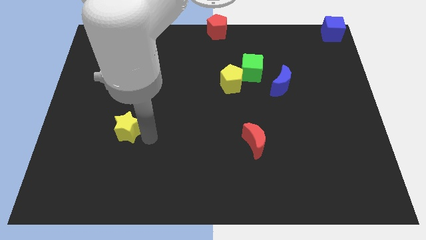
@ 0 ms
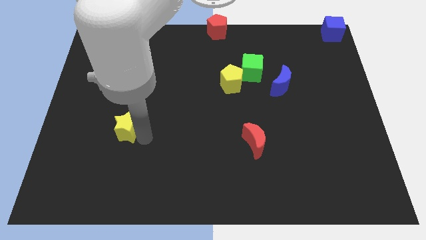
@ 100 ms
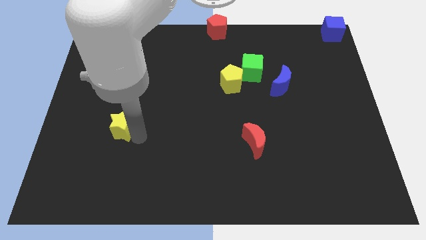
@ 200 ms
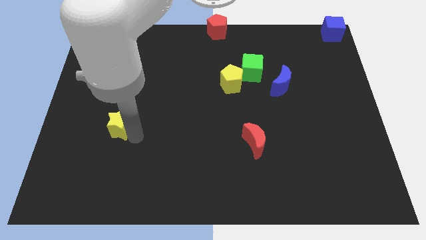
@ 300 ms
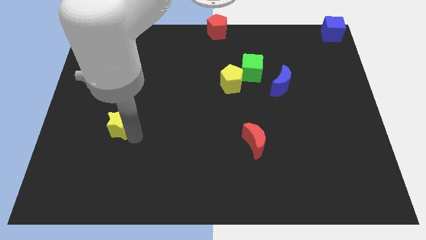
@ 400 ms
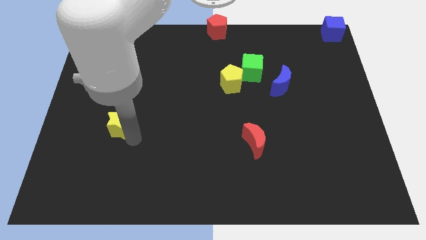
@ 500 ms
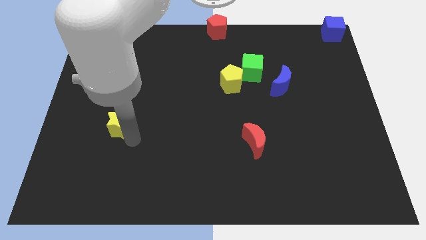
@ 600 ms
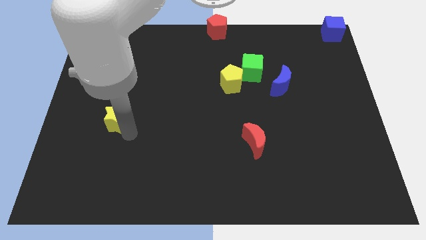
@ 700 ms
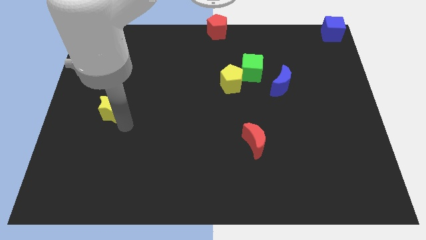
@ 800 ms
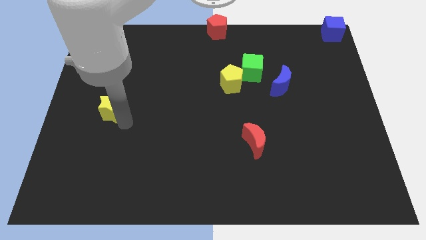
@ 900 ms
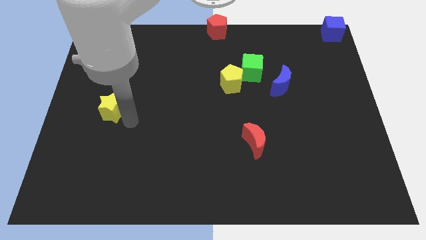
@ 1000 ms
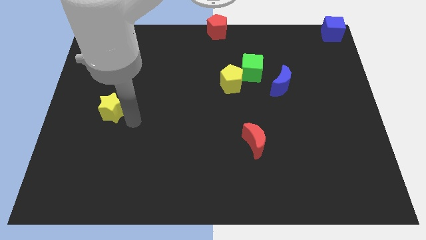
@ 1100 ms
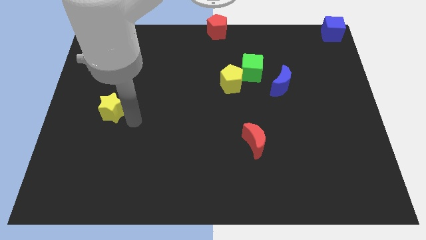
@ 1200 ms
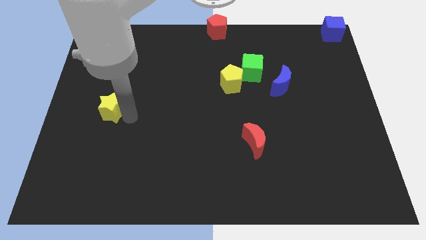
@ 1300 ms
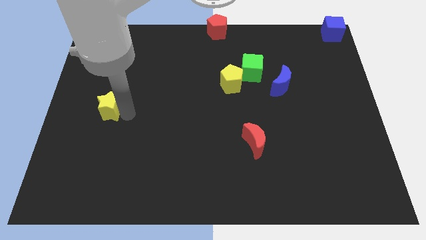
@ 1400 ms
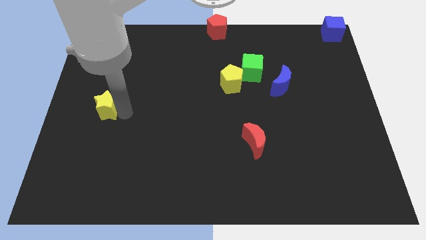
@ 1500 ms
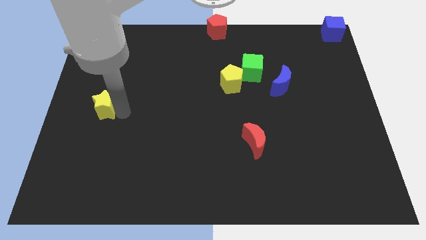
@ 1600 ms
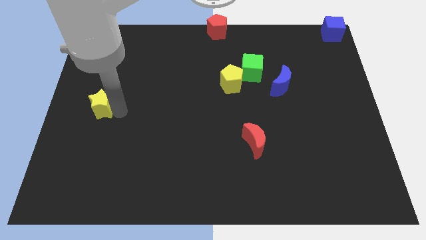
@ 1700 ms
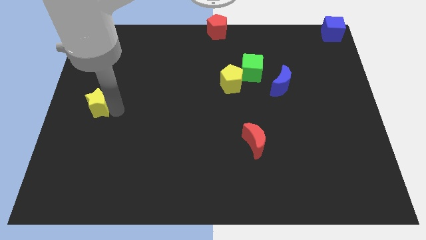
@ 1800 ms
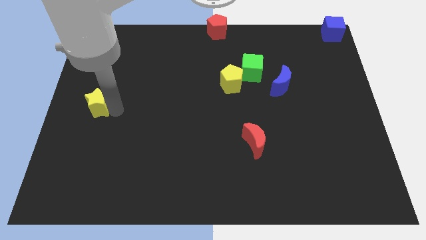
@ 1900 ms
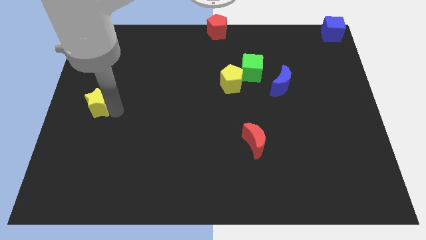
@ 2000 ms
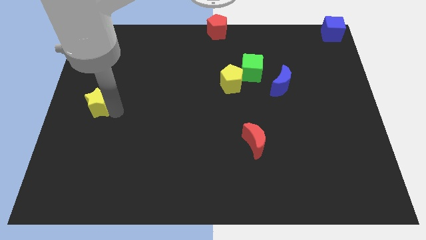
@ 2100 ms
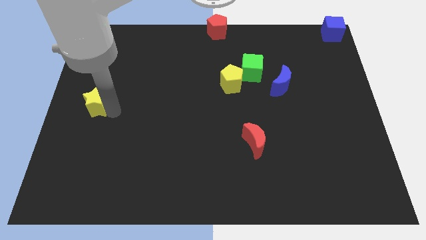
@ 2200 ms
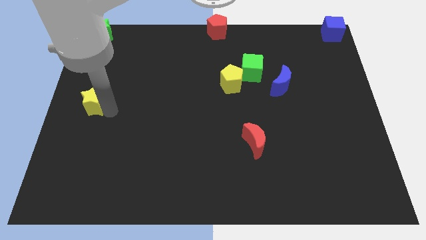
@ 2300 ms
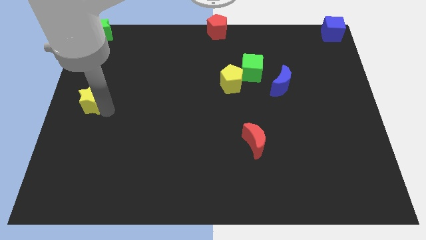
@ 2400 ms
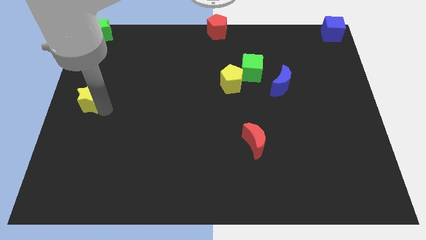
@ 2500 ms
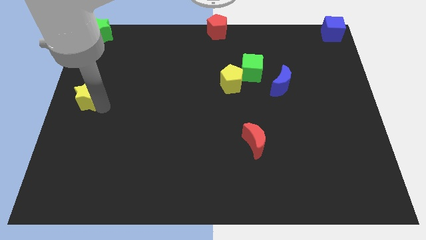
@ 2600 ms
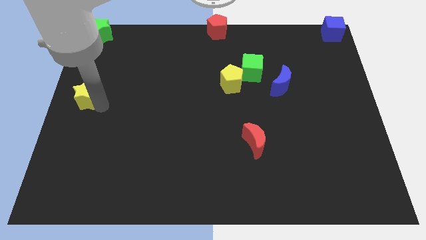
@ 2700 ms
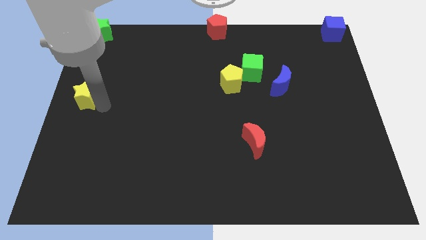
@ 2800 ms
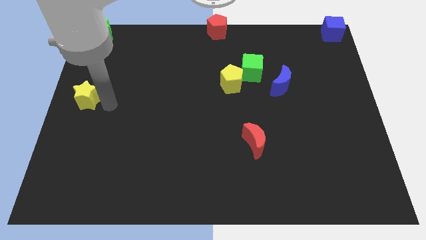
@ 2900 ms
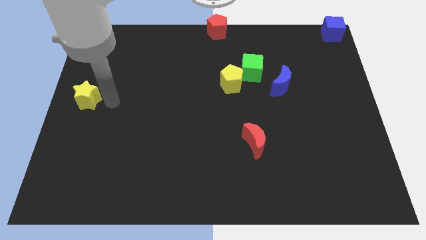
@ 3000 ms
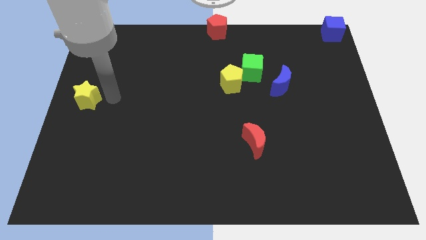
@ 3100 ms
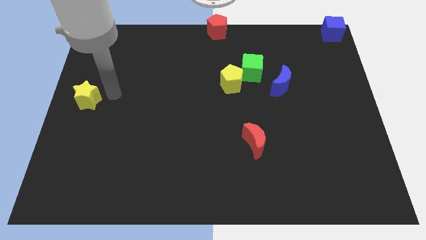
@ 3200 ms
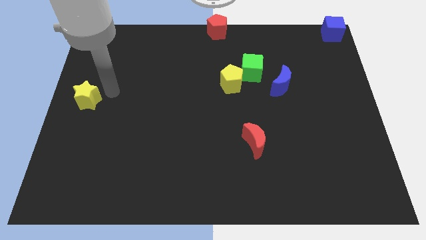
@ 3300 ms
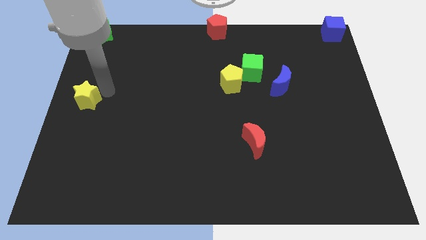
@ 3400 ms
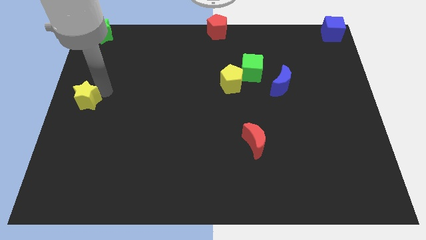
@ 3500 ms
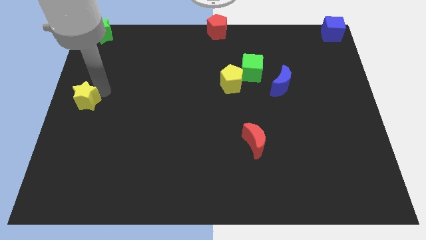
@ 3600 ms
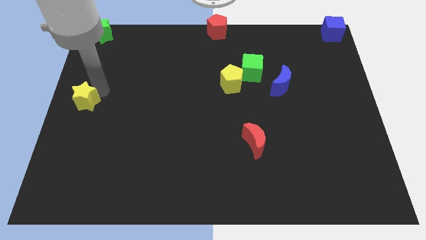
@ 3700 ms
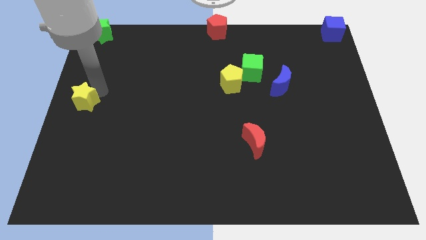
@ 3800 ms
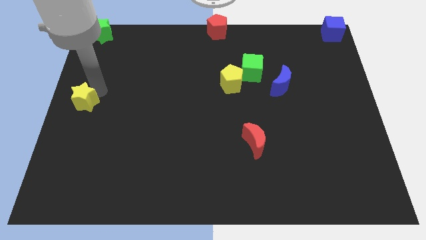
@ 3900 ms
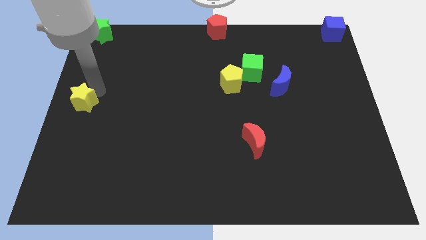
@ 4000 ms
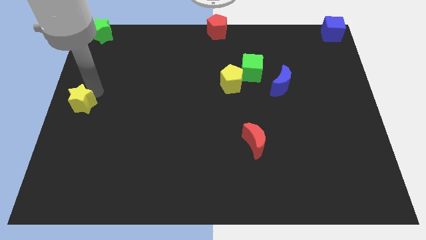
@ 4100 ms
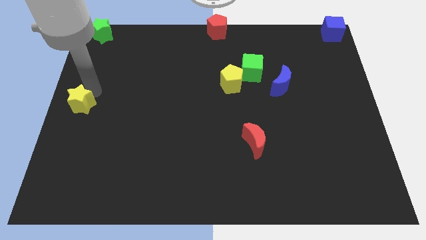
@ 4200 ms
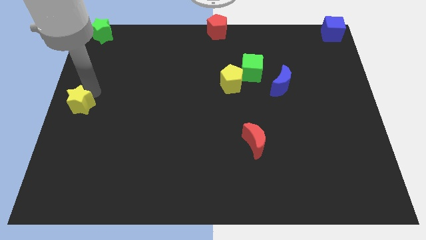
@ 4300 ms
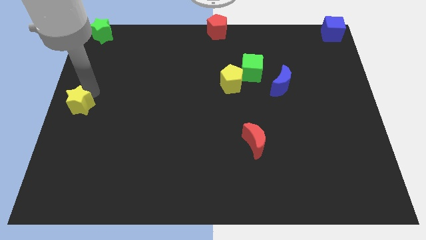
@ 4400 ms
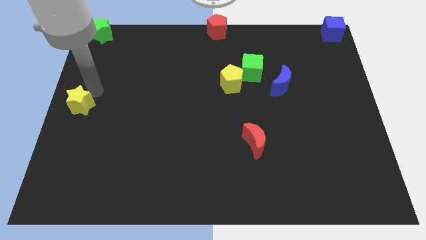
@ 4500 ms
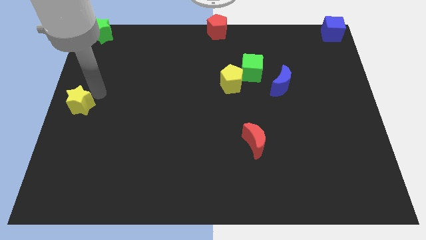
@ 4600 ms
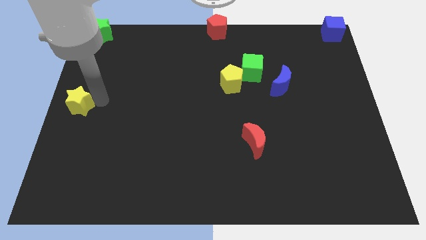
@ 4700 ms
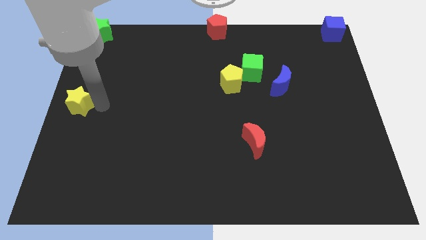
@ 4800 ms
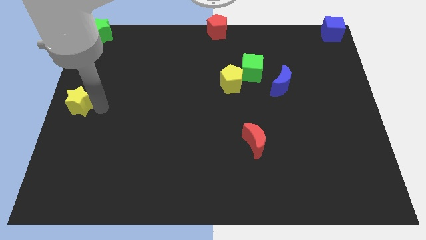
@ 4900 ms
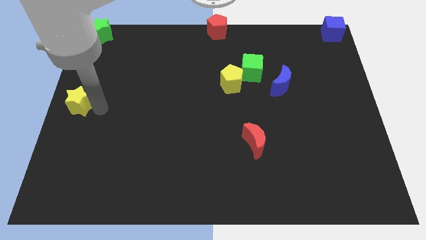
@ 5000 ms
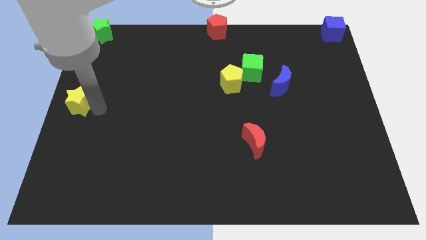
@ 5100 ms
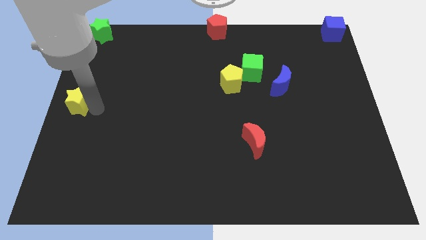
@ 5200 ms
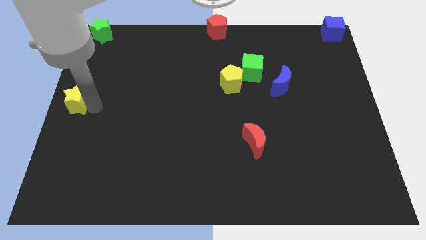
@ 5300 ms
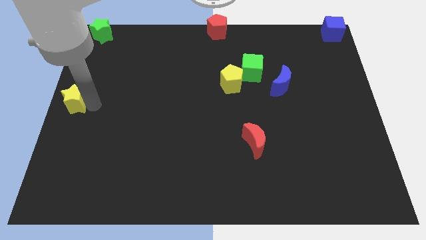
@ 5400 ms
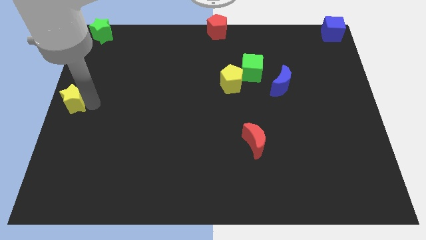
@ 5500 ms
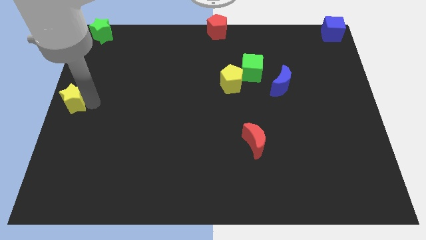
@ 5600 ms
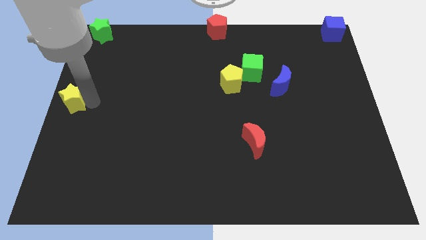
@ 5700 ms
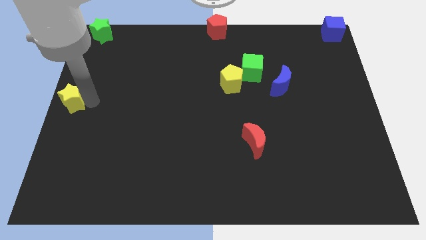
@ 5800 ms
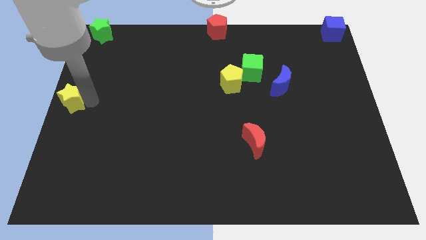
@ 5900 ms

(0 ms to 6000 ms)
push the yellow star to the left center of the board

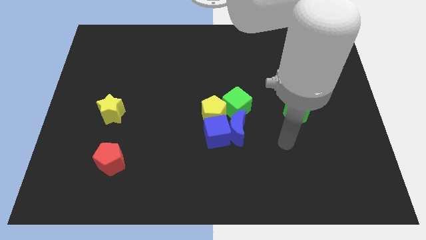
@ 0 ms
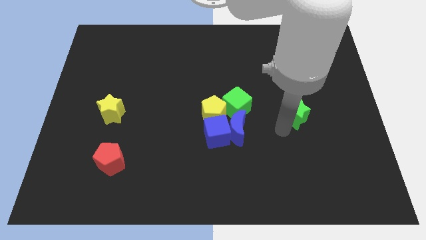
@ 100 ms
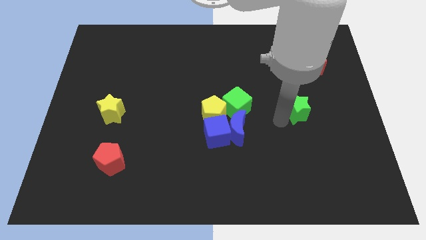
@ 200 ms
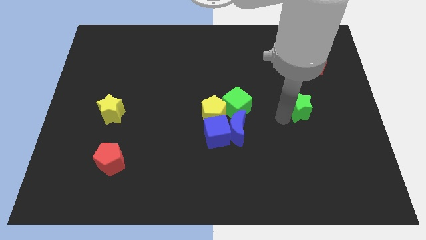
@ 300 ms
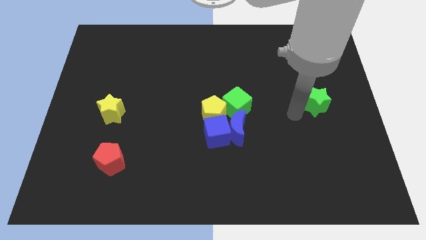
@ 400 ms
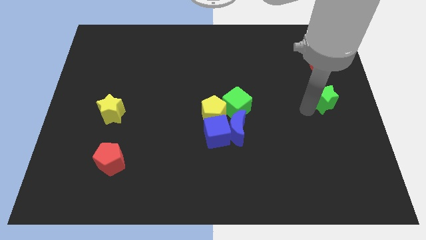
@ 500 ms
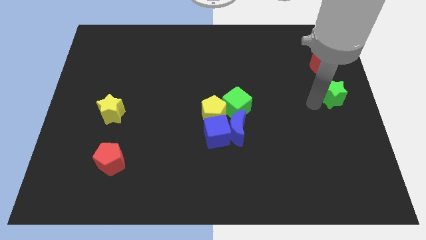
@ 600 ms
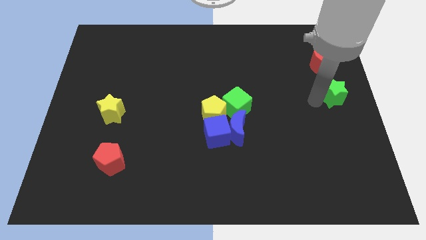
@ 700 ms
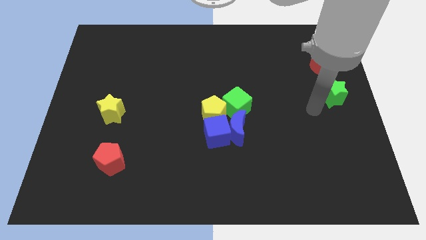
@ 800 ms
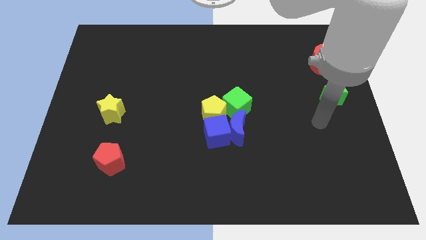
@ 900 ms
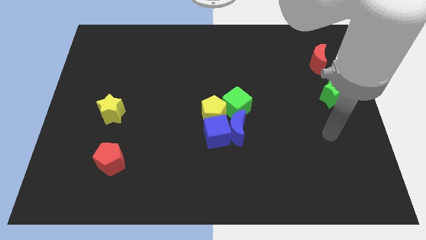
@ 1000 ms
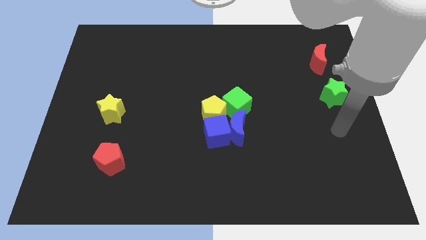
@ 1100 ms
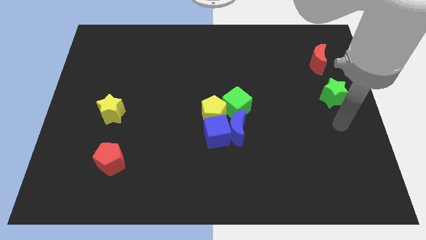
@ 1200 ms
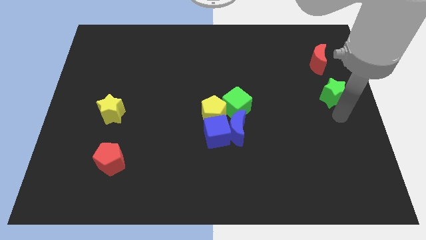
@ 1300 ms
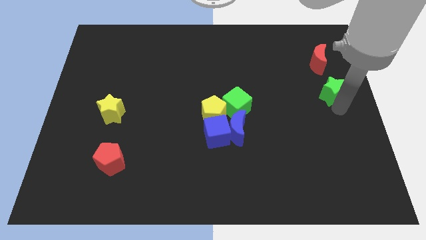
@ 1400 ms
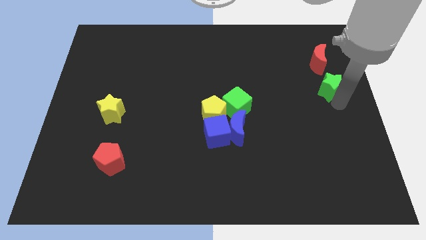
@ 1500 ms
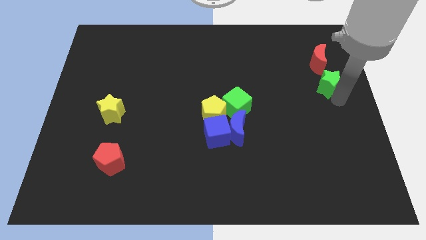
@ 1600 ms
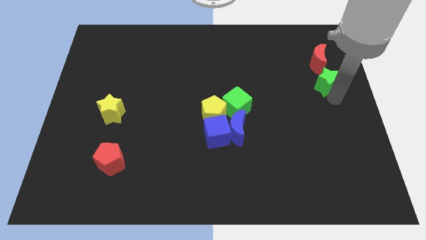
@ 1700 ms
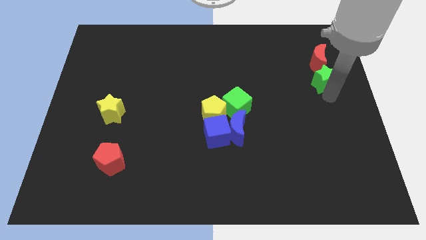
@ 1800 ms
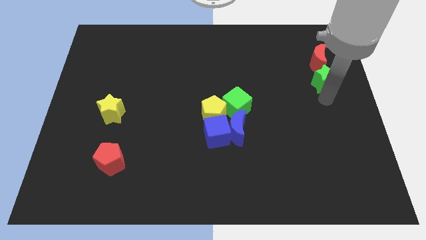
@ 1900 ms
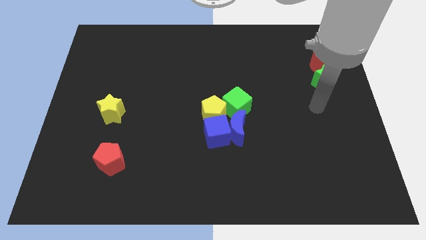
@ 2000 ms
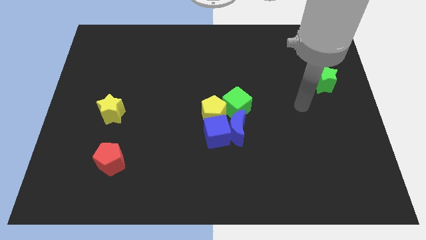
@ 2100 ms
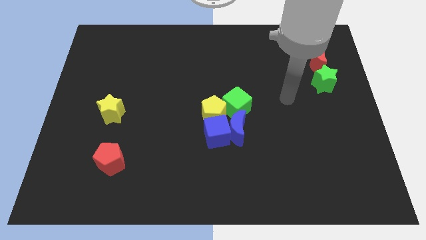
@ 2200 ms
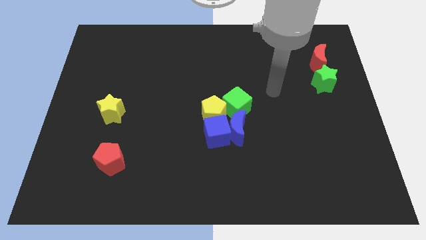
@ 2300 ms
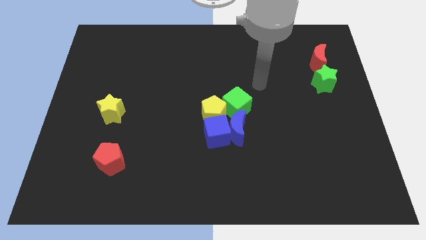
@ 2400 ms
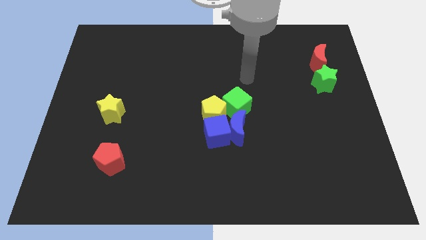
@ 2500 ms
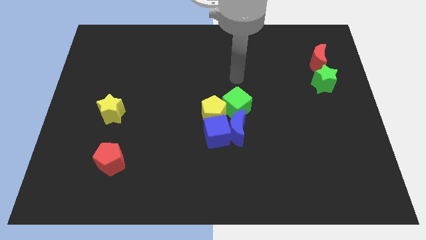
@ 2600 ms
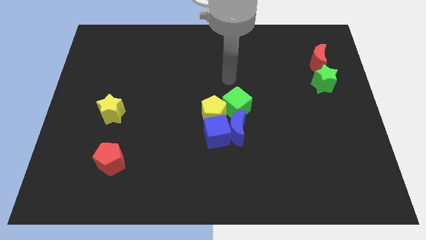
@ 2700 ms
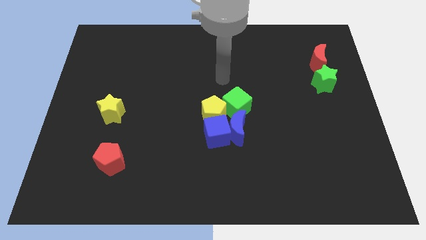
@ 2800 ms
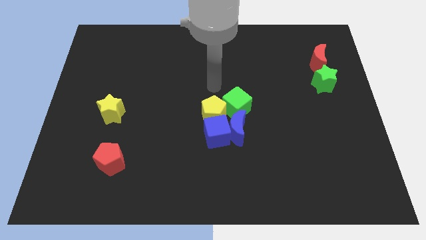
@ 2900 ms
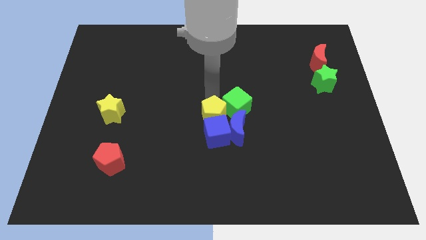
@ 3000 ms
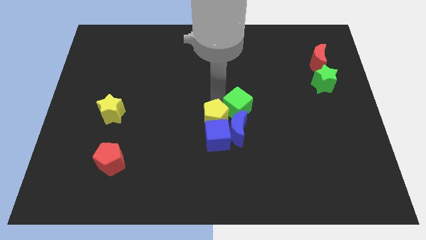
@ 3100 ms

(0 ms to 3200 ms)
move your arm away form the green star
